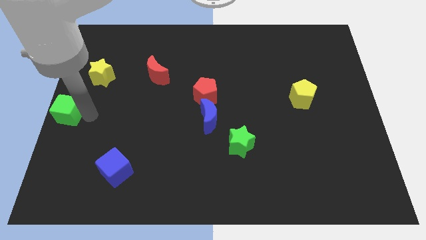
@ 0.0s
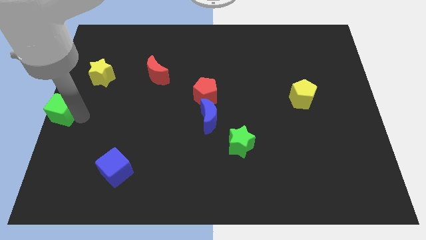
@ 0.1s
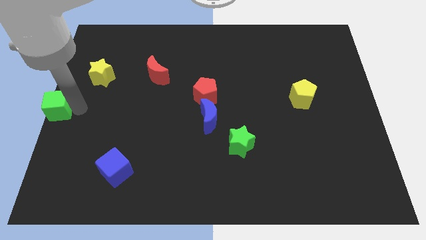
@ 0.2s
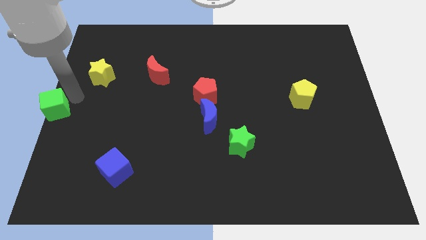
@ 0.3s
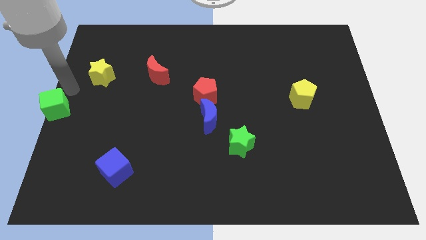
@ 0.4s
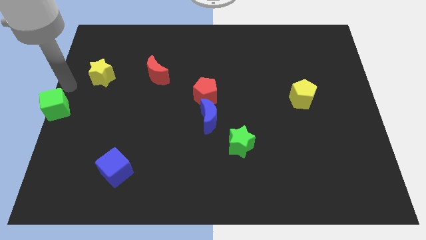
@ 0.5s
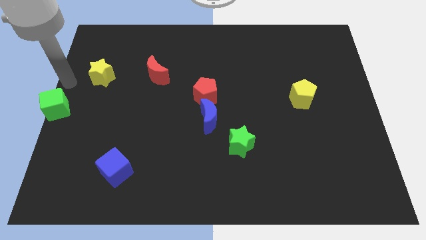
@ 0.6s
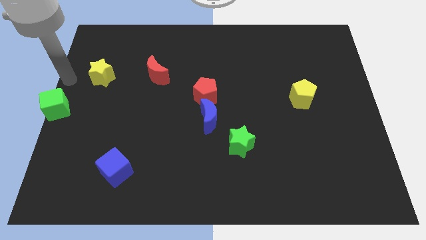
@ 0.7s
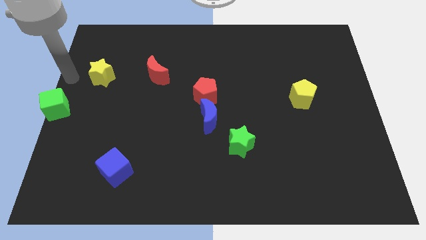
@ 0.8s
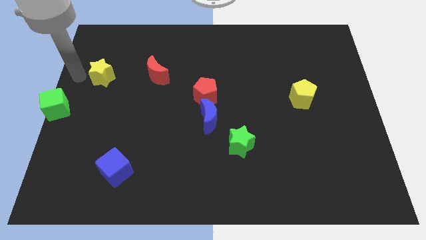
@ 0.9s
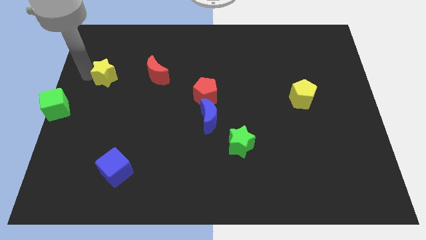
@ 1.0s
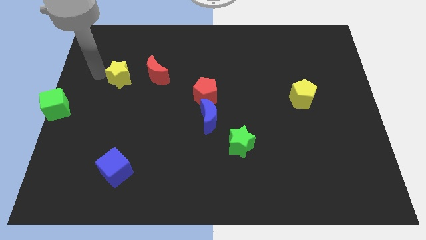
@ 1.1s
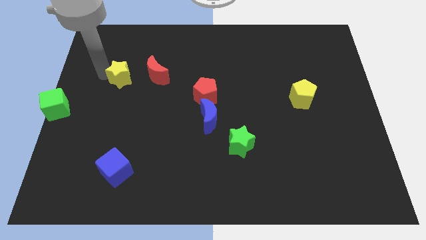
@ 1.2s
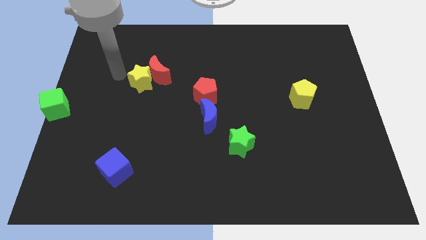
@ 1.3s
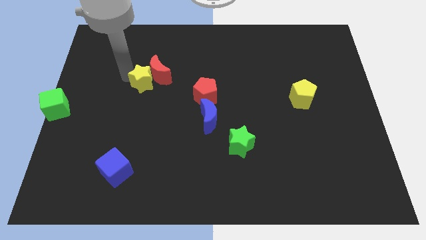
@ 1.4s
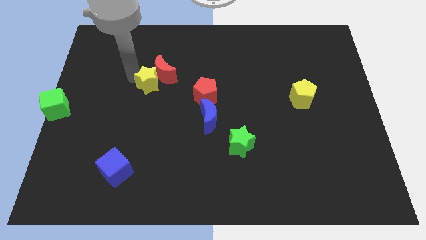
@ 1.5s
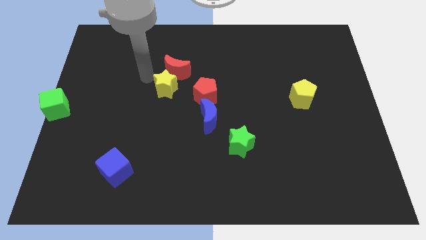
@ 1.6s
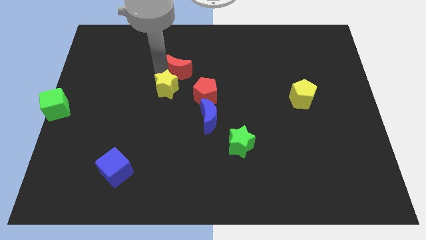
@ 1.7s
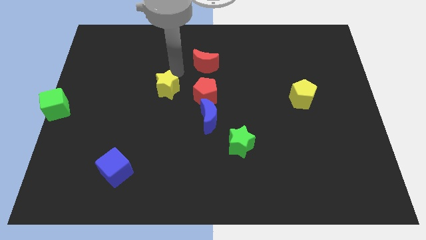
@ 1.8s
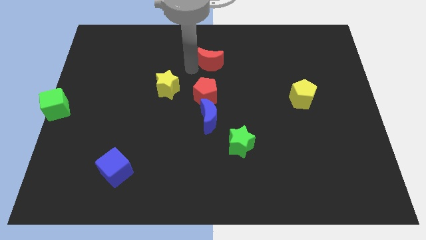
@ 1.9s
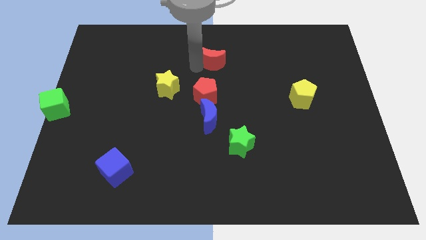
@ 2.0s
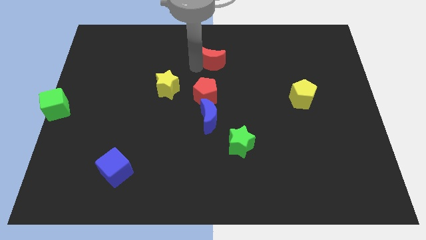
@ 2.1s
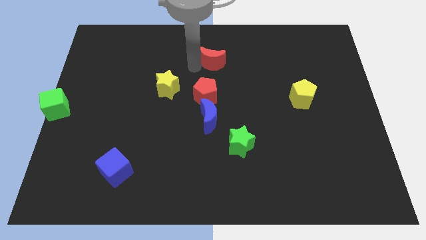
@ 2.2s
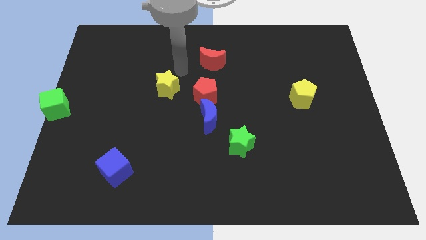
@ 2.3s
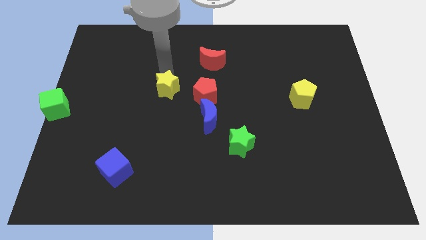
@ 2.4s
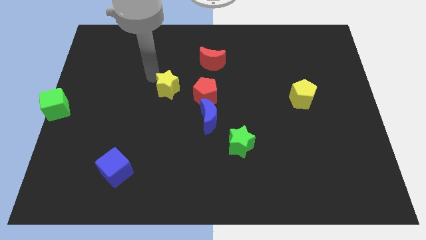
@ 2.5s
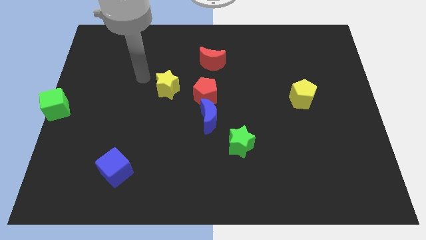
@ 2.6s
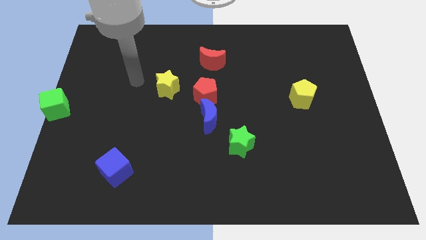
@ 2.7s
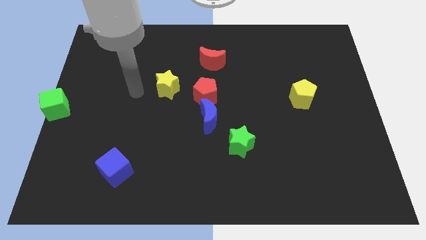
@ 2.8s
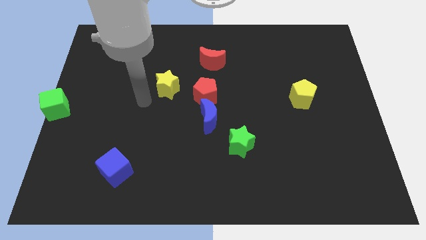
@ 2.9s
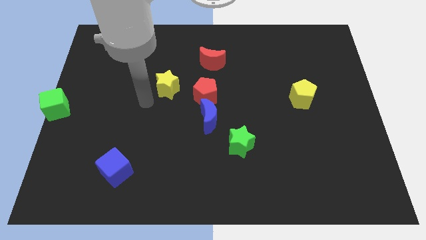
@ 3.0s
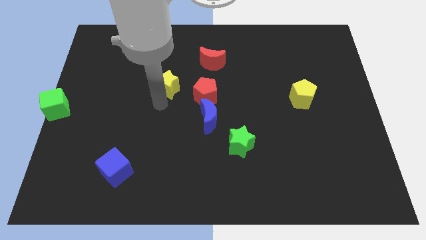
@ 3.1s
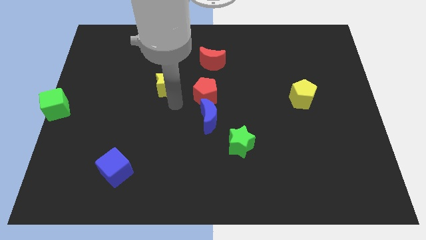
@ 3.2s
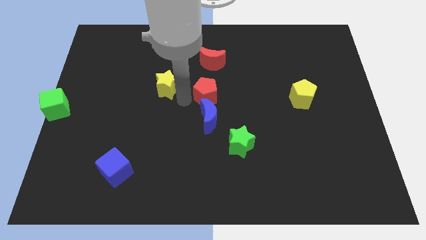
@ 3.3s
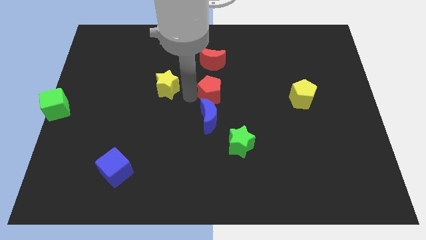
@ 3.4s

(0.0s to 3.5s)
move the yellow star and red moon to the center

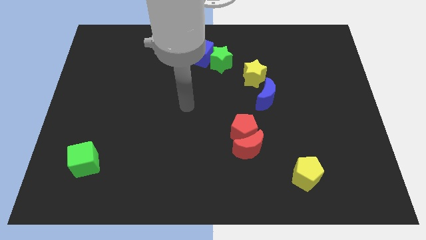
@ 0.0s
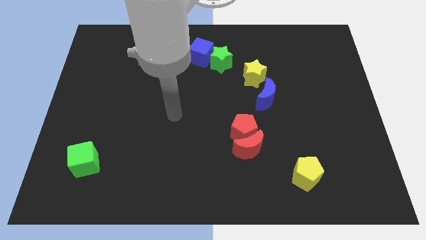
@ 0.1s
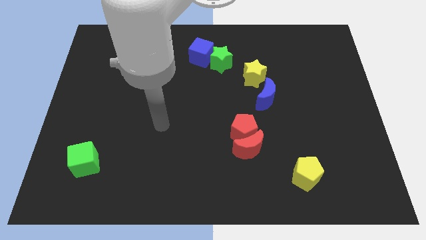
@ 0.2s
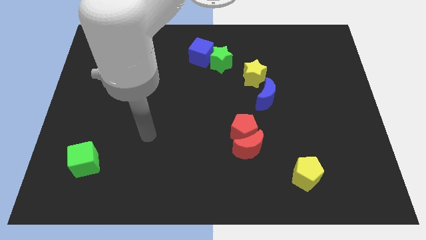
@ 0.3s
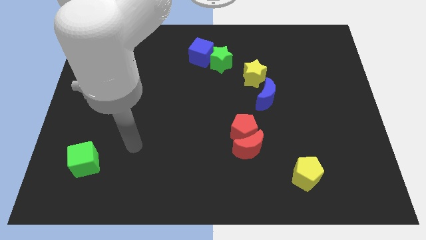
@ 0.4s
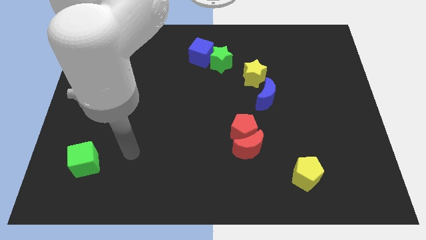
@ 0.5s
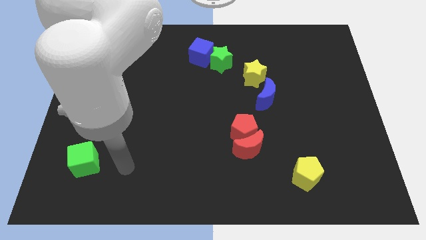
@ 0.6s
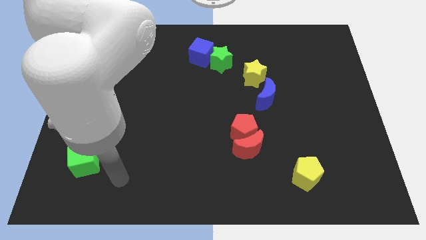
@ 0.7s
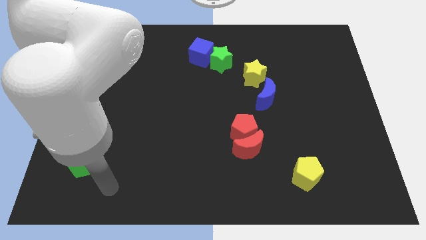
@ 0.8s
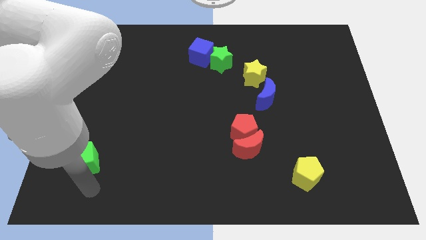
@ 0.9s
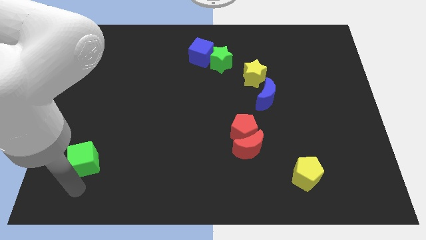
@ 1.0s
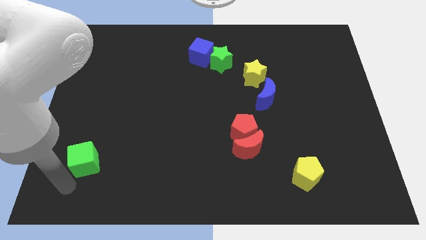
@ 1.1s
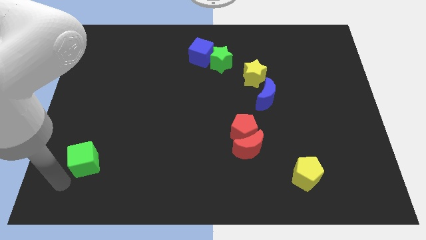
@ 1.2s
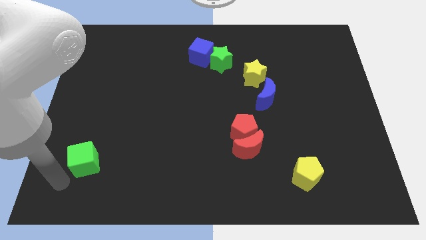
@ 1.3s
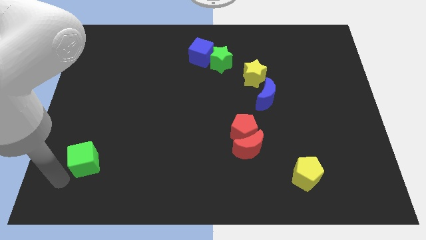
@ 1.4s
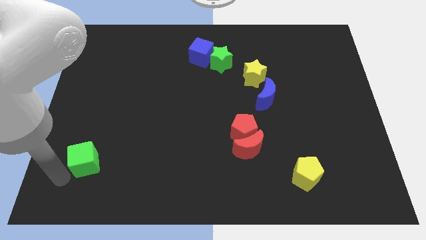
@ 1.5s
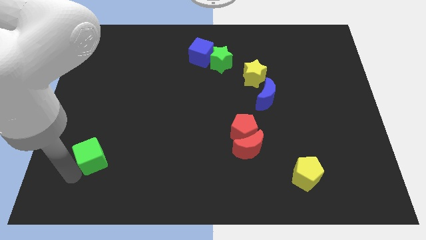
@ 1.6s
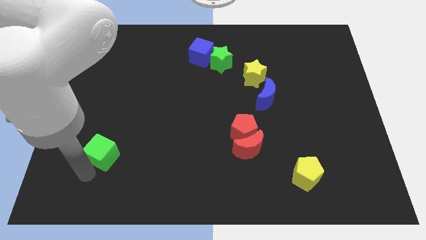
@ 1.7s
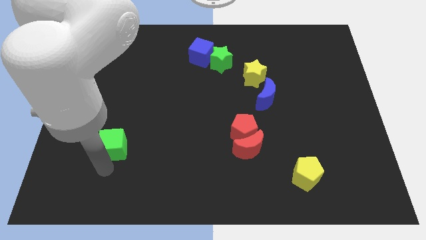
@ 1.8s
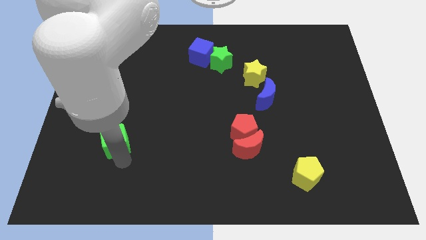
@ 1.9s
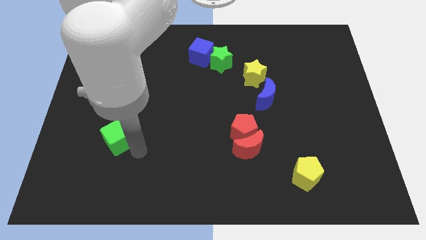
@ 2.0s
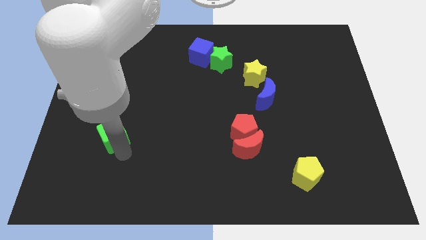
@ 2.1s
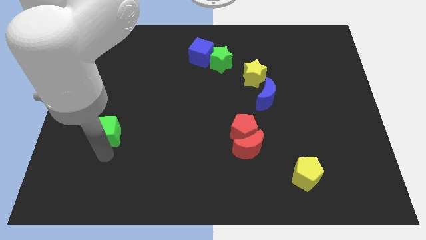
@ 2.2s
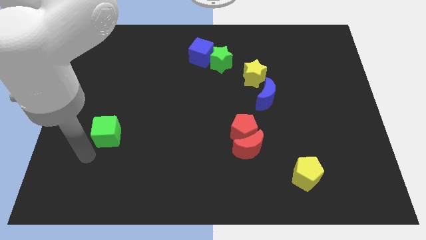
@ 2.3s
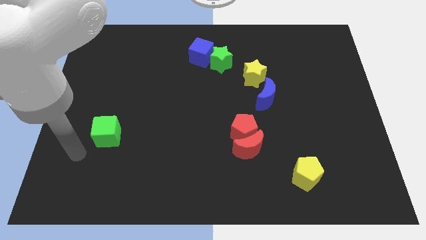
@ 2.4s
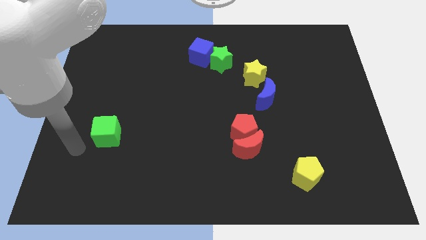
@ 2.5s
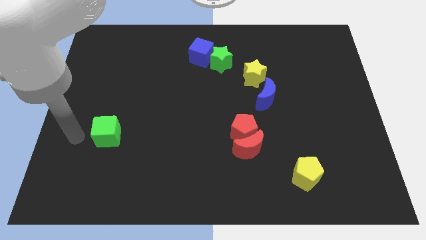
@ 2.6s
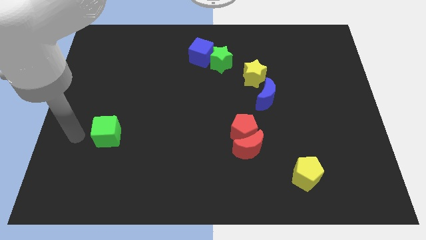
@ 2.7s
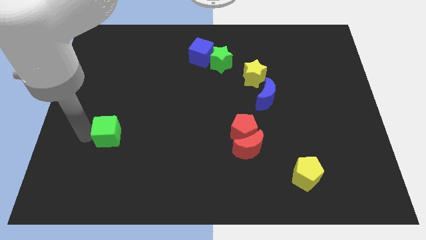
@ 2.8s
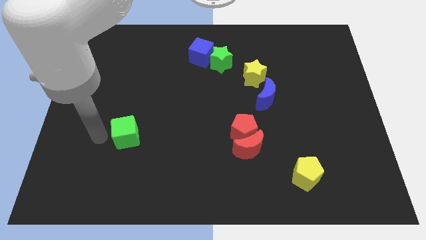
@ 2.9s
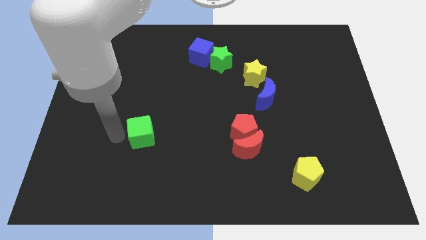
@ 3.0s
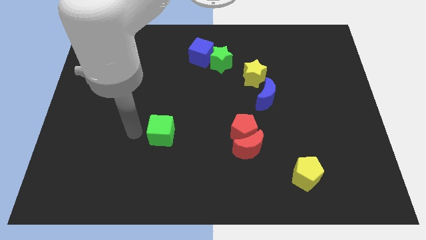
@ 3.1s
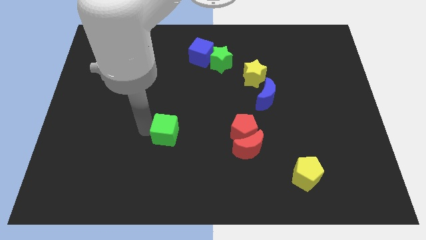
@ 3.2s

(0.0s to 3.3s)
slide the green cube horizontally left of the red pentagon

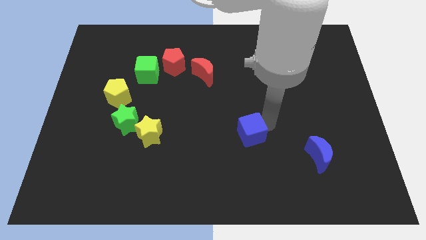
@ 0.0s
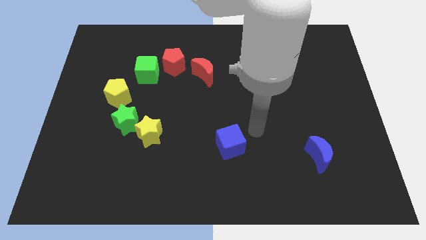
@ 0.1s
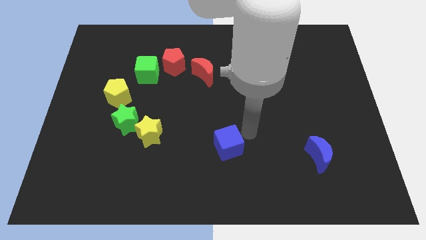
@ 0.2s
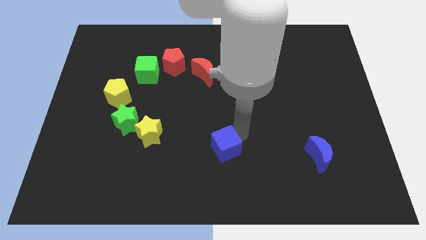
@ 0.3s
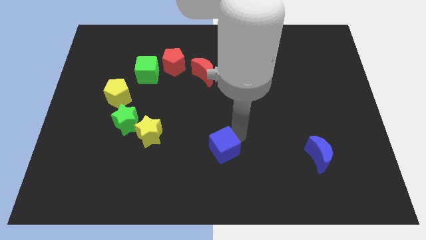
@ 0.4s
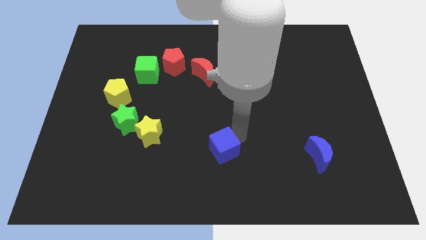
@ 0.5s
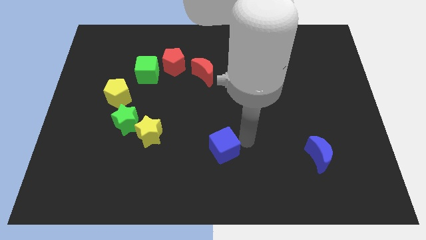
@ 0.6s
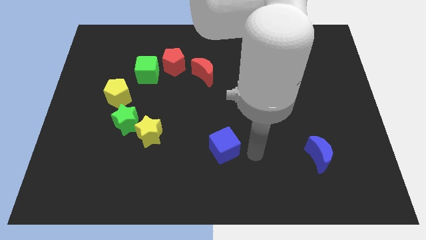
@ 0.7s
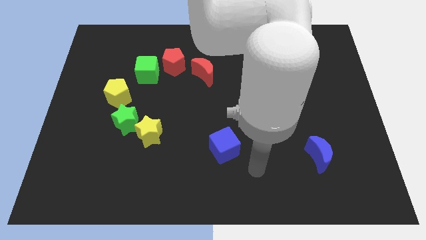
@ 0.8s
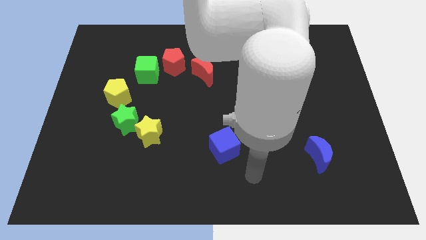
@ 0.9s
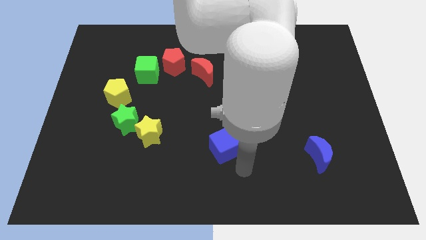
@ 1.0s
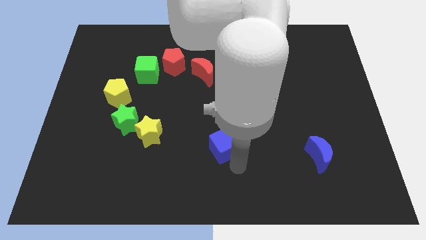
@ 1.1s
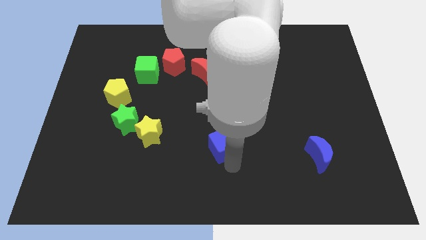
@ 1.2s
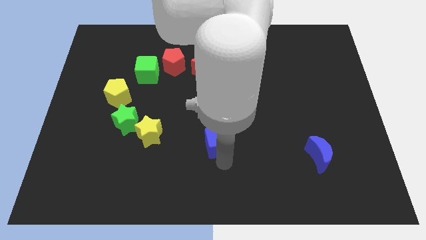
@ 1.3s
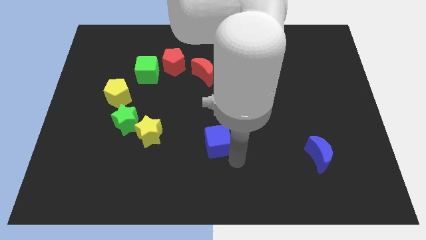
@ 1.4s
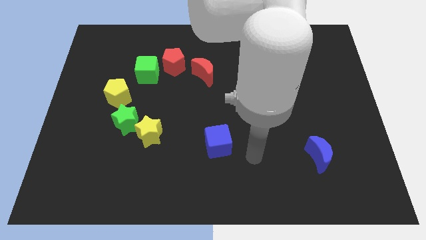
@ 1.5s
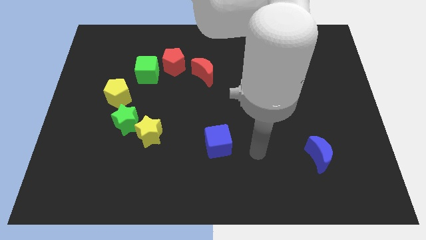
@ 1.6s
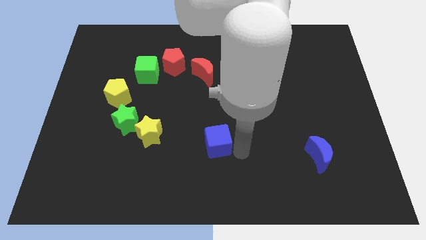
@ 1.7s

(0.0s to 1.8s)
put the blue cube vertically below the red moon

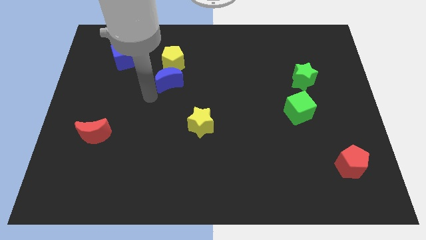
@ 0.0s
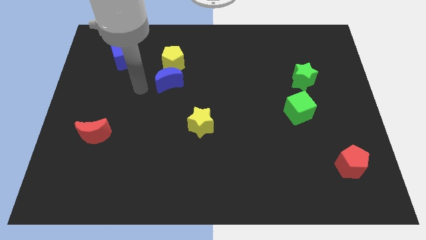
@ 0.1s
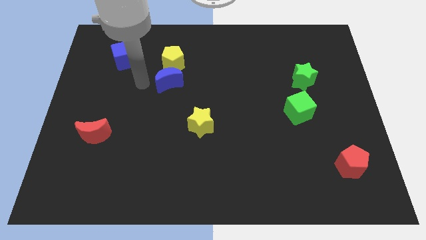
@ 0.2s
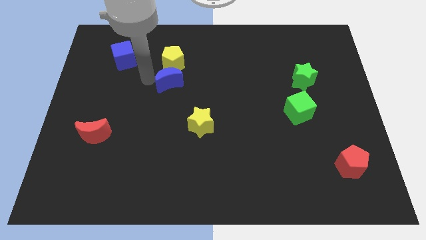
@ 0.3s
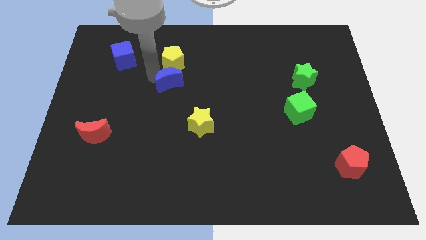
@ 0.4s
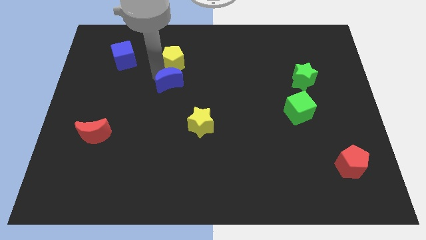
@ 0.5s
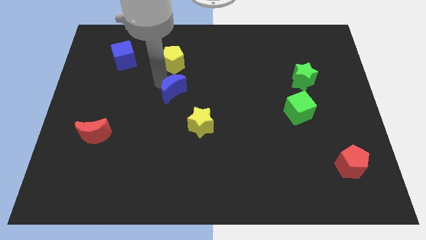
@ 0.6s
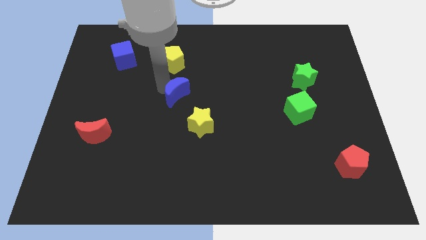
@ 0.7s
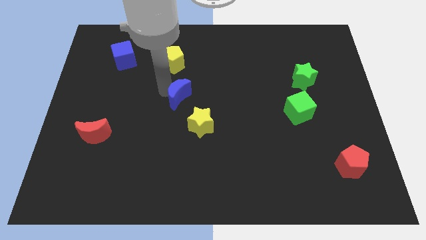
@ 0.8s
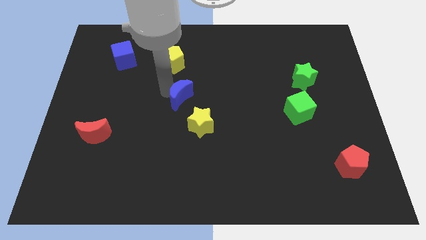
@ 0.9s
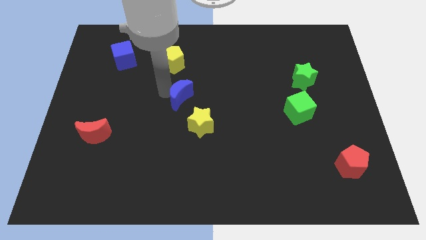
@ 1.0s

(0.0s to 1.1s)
move blue crescent slightly towards the yellow star
